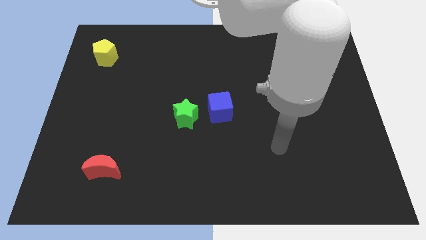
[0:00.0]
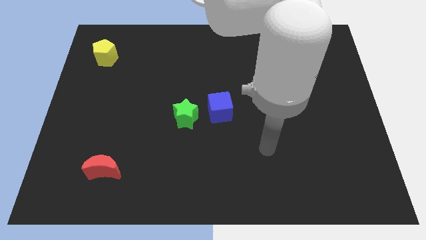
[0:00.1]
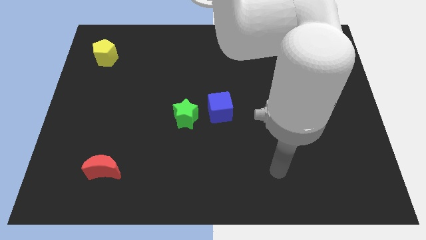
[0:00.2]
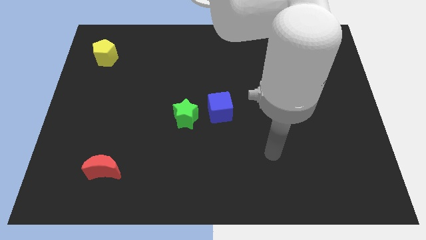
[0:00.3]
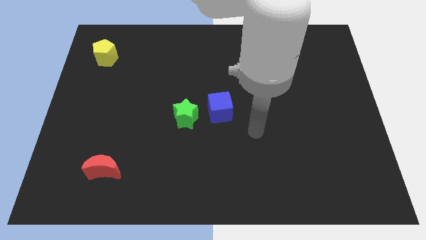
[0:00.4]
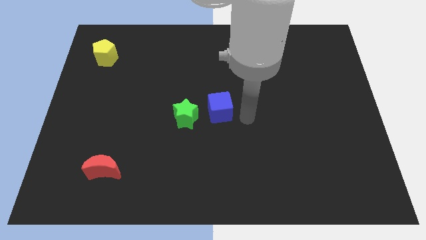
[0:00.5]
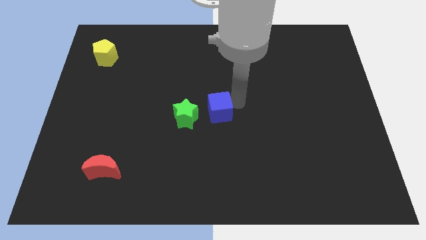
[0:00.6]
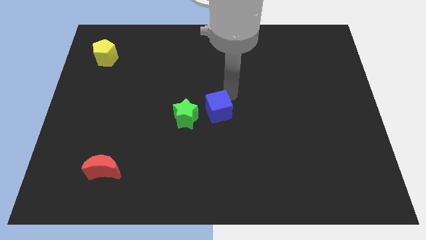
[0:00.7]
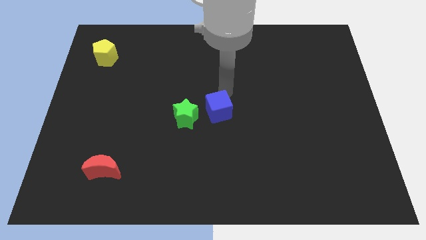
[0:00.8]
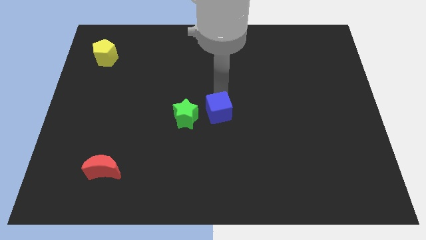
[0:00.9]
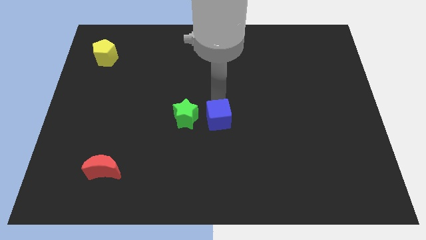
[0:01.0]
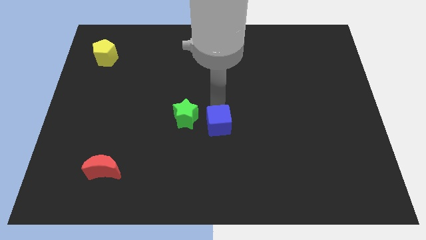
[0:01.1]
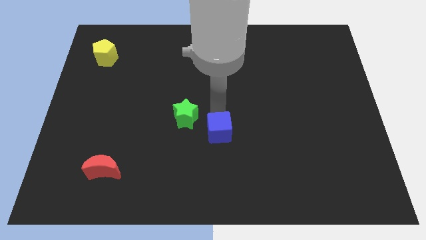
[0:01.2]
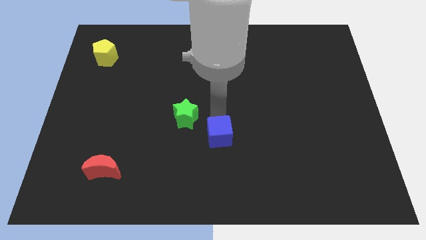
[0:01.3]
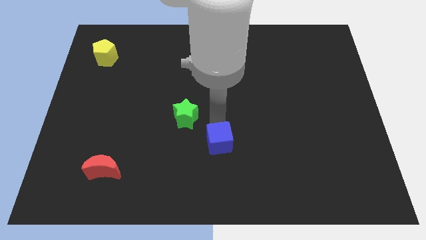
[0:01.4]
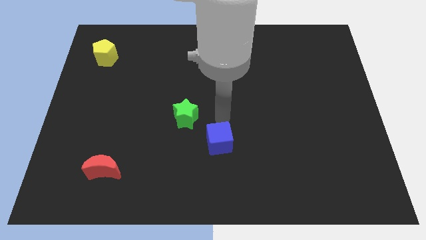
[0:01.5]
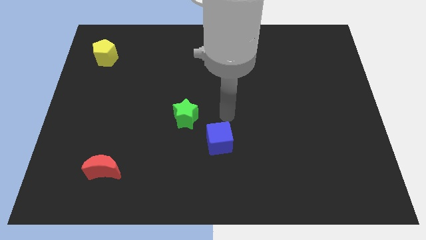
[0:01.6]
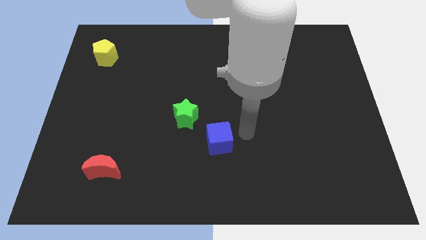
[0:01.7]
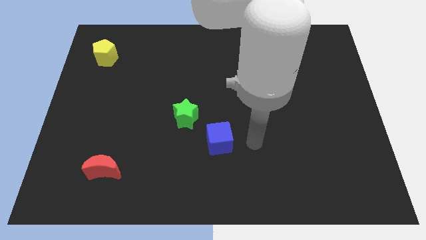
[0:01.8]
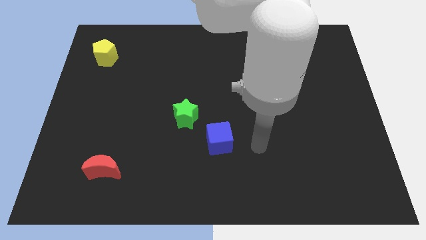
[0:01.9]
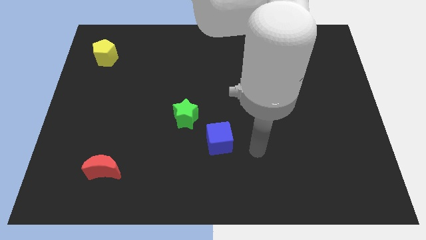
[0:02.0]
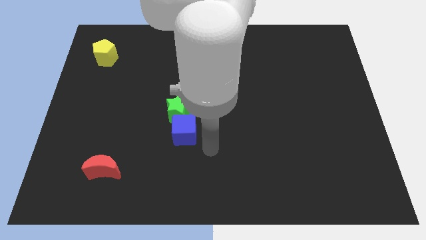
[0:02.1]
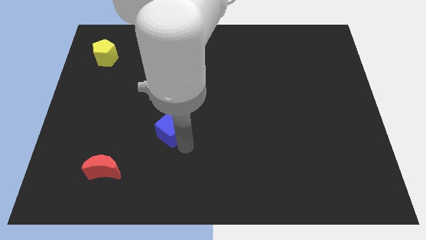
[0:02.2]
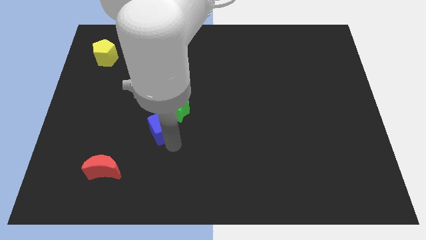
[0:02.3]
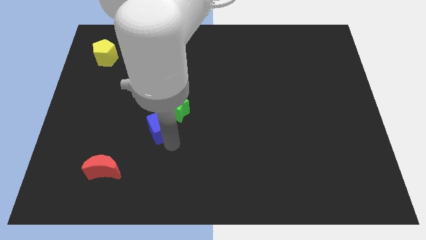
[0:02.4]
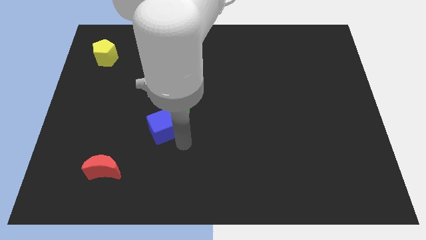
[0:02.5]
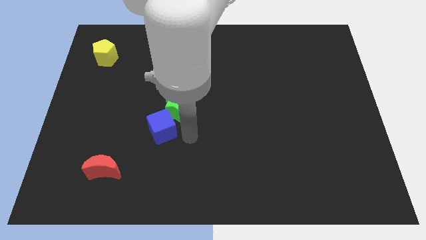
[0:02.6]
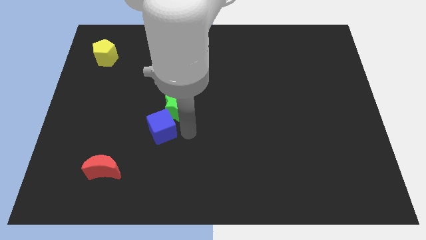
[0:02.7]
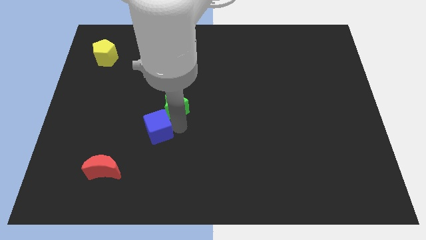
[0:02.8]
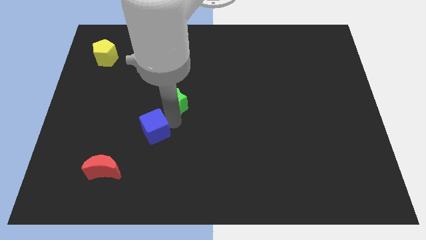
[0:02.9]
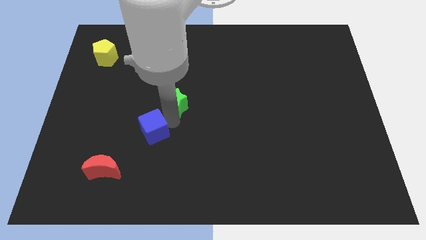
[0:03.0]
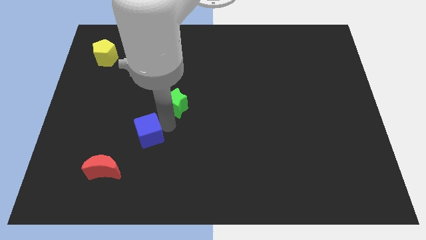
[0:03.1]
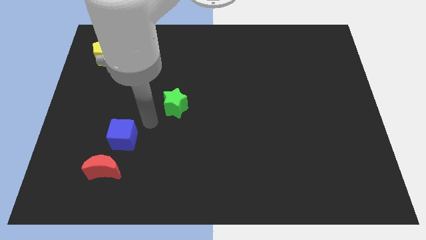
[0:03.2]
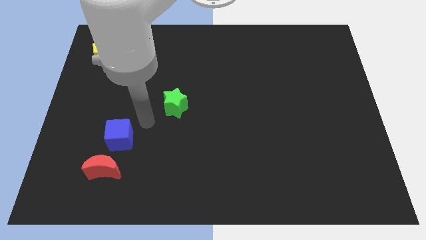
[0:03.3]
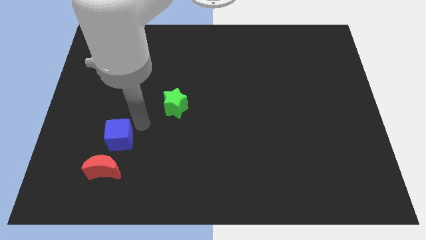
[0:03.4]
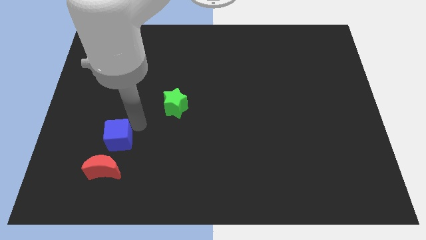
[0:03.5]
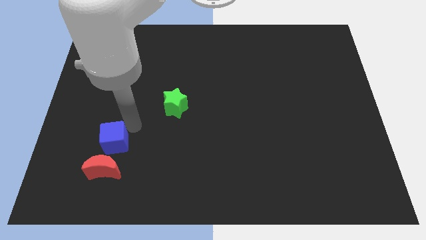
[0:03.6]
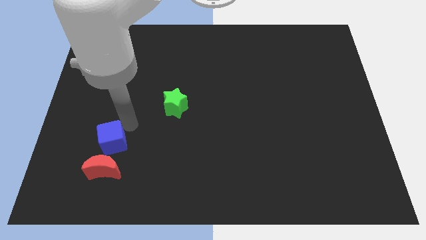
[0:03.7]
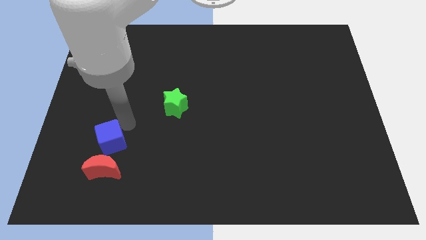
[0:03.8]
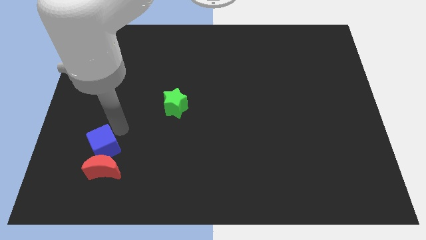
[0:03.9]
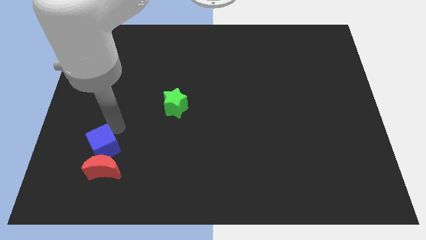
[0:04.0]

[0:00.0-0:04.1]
push the blue block close to the moon

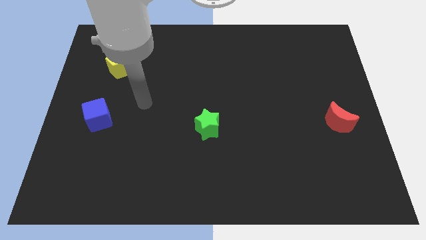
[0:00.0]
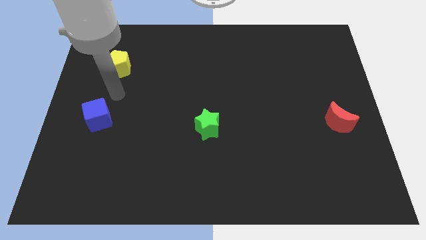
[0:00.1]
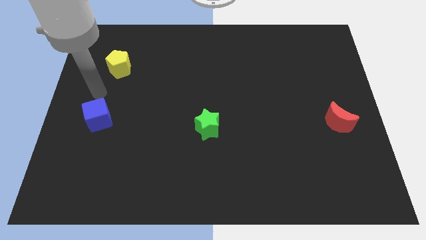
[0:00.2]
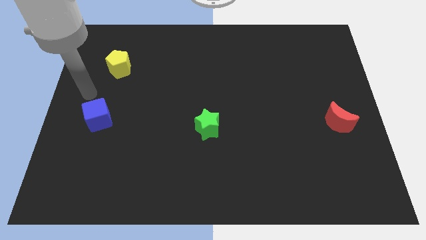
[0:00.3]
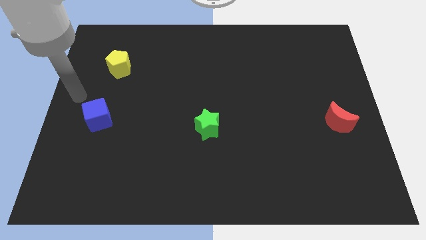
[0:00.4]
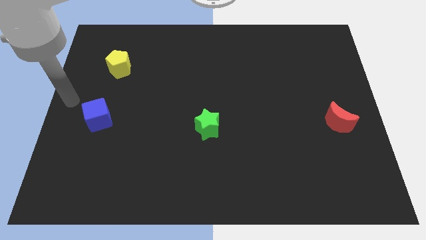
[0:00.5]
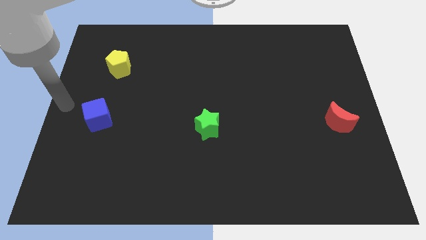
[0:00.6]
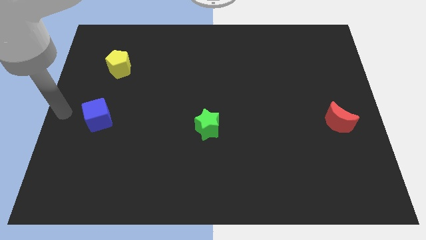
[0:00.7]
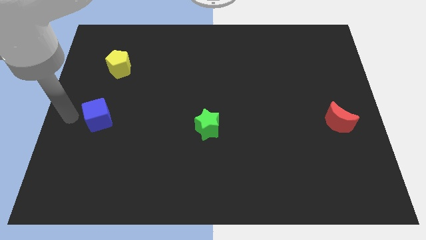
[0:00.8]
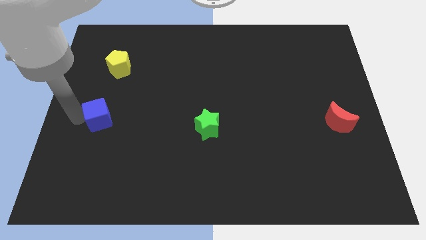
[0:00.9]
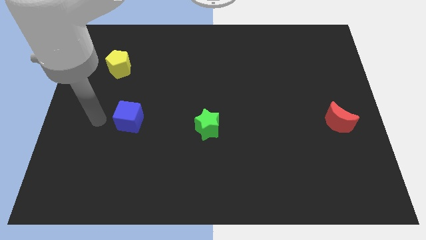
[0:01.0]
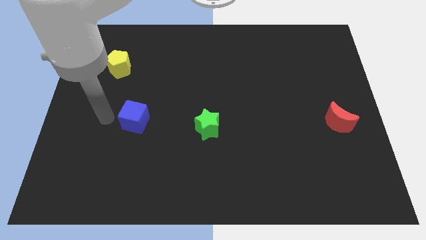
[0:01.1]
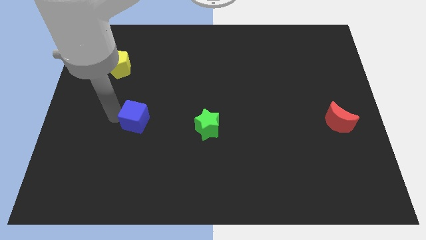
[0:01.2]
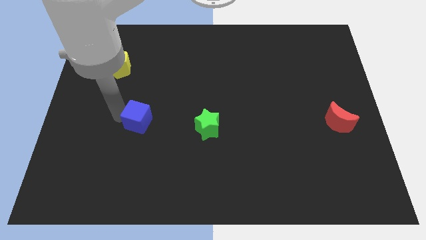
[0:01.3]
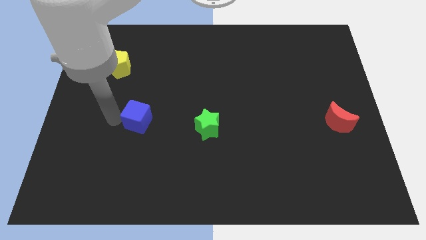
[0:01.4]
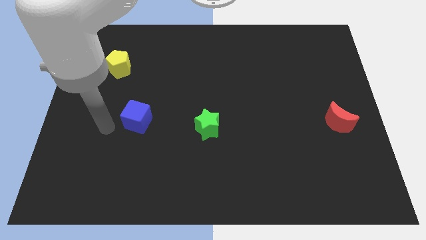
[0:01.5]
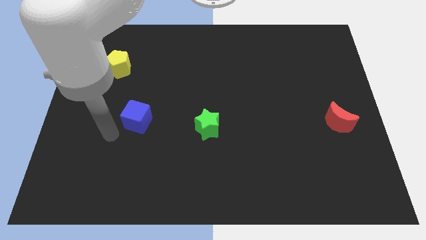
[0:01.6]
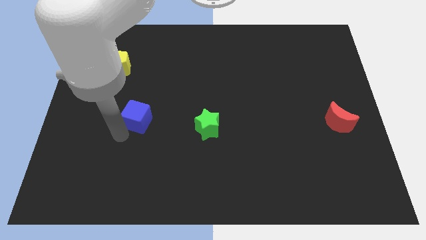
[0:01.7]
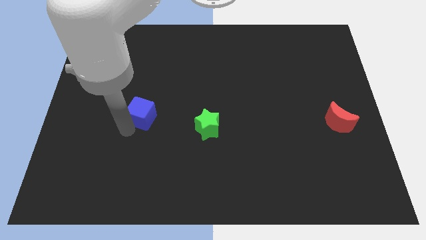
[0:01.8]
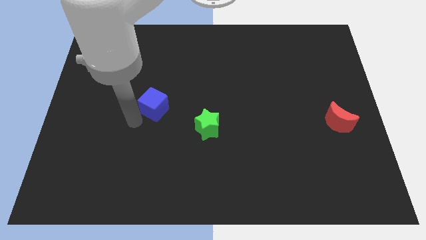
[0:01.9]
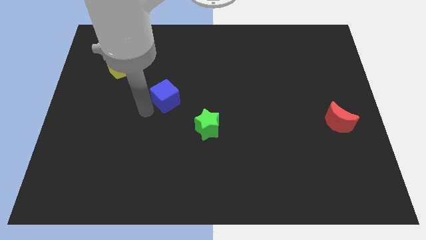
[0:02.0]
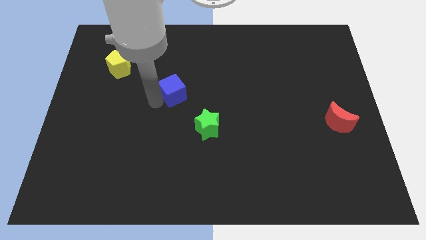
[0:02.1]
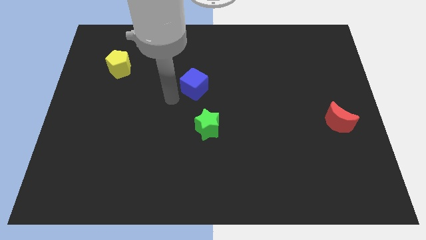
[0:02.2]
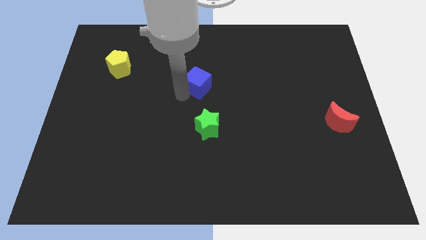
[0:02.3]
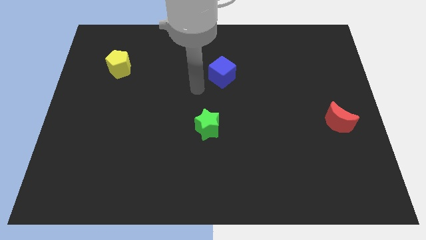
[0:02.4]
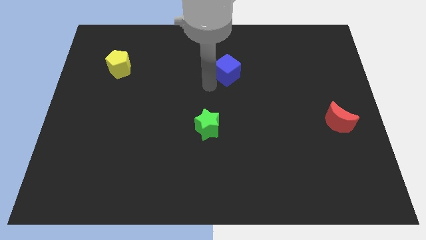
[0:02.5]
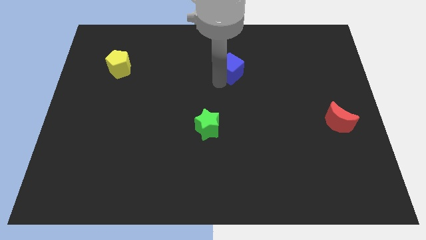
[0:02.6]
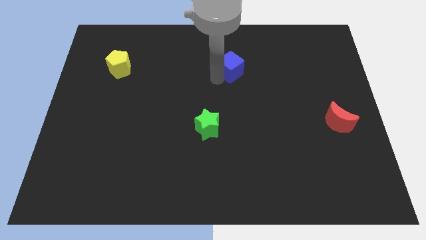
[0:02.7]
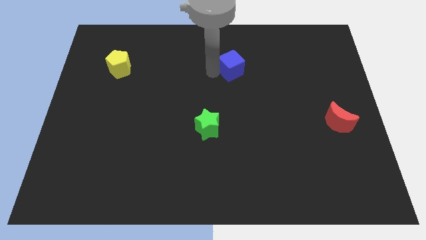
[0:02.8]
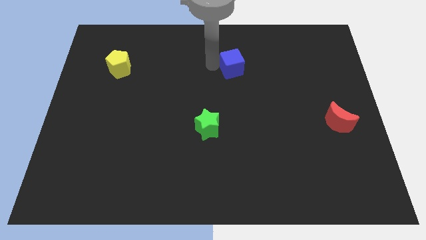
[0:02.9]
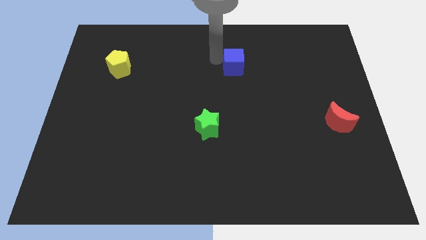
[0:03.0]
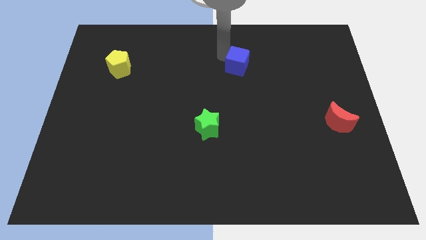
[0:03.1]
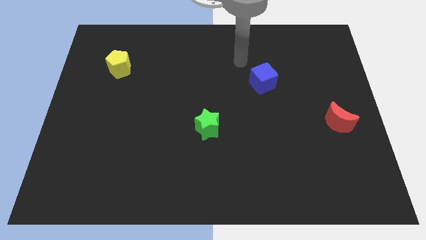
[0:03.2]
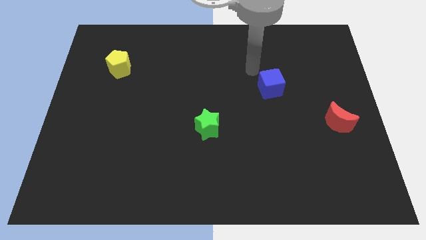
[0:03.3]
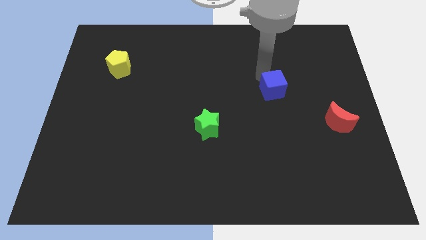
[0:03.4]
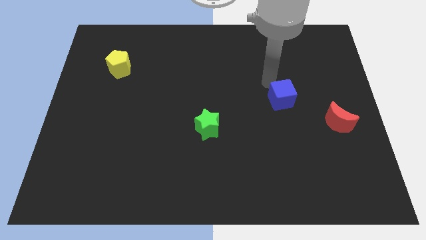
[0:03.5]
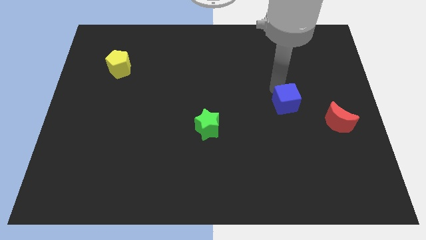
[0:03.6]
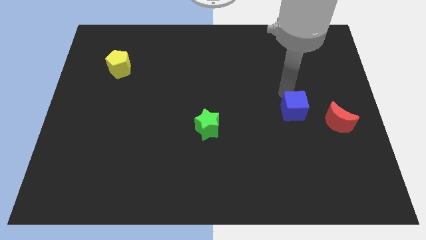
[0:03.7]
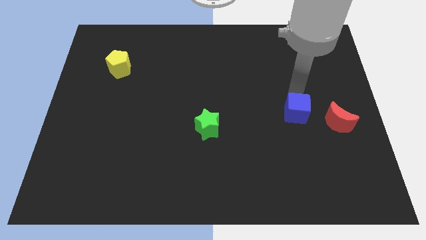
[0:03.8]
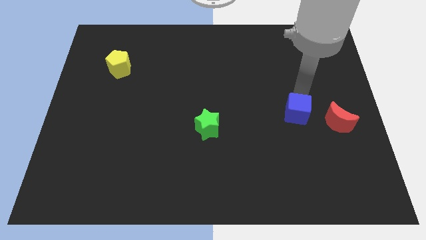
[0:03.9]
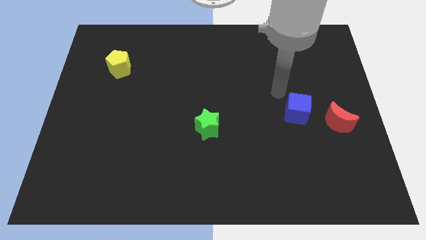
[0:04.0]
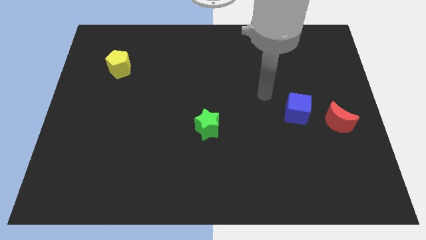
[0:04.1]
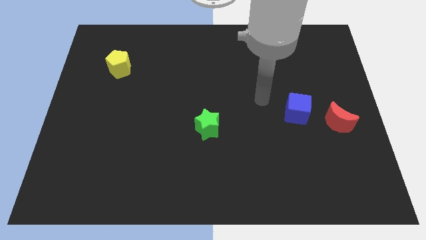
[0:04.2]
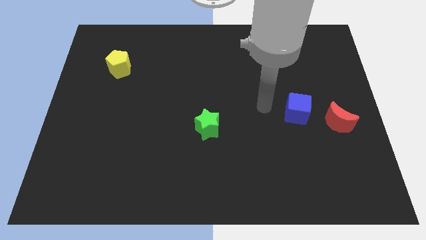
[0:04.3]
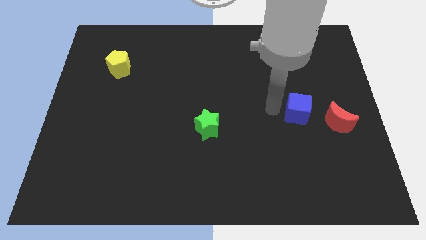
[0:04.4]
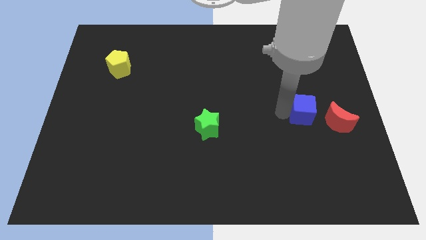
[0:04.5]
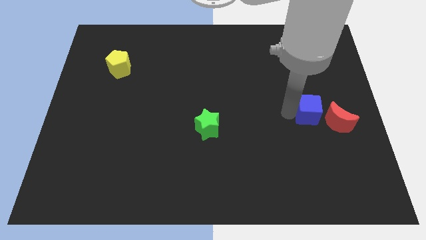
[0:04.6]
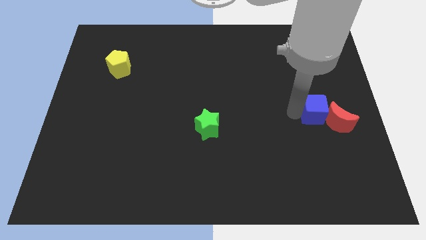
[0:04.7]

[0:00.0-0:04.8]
slide the blue block to the red moon
